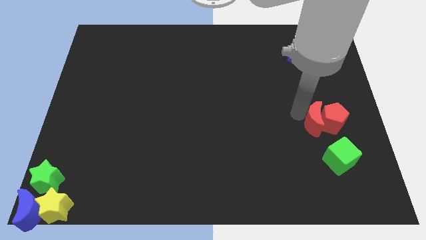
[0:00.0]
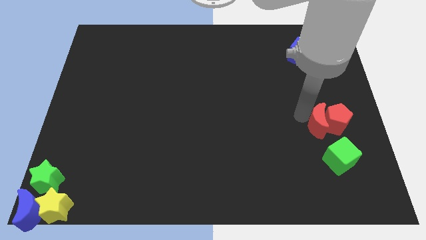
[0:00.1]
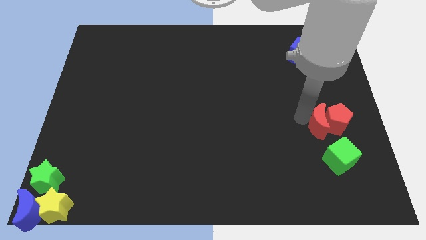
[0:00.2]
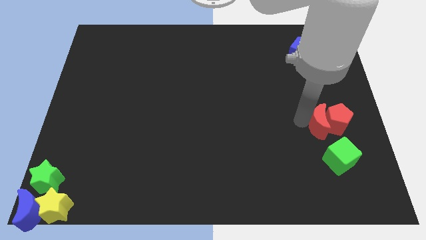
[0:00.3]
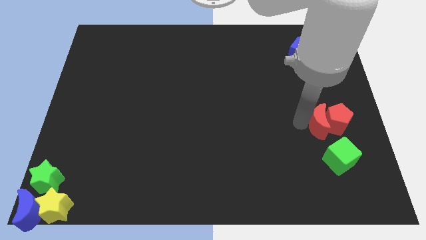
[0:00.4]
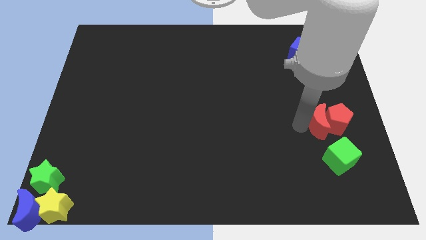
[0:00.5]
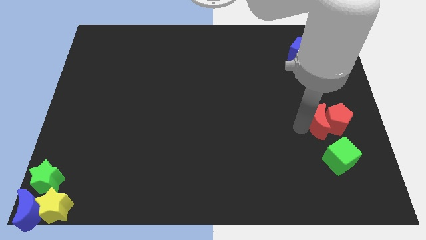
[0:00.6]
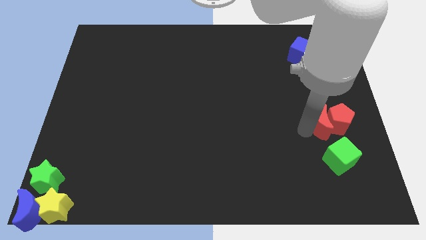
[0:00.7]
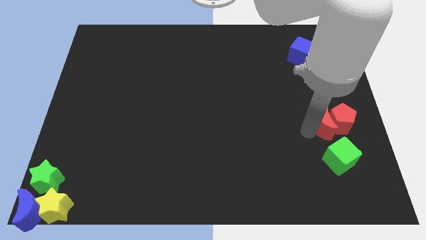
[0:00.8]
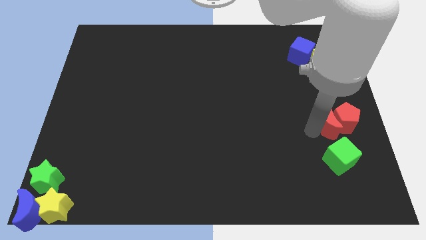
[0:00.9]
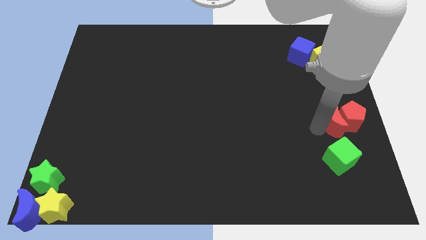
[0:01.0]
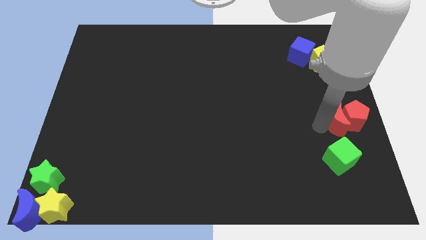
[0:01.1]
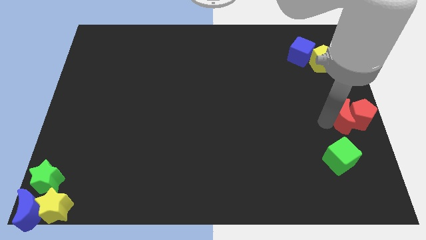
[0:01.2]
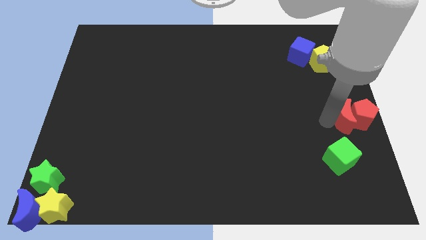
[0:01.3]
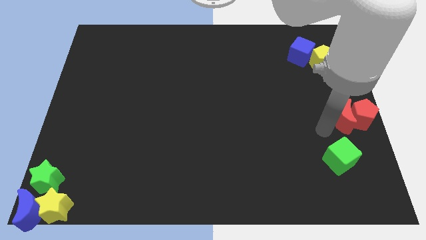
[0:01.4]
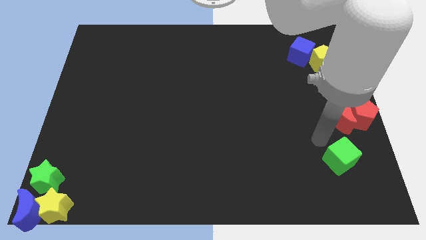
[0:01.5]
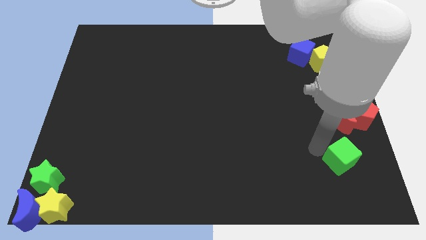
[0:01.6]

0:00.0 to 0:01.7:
push red moon and red pentagon to the right side of the board

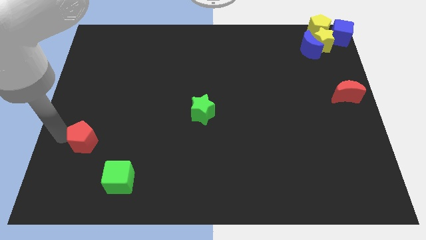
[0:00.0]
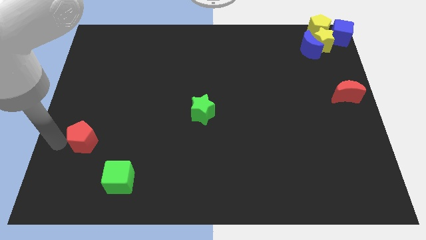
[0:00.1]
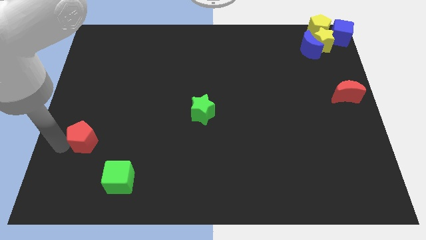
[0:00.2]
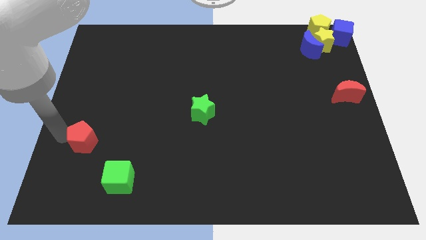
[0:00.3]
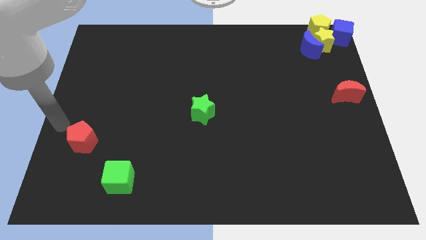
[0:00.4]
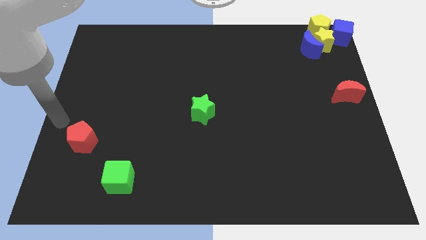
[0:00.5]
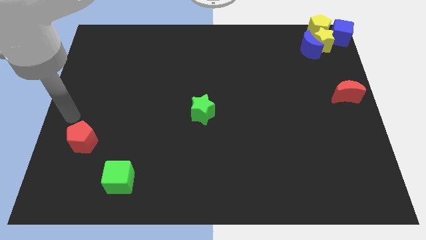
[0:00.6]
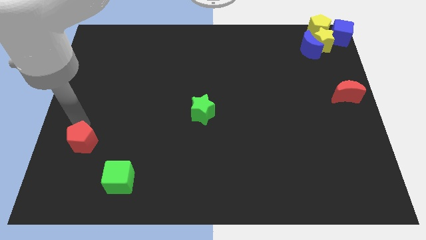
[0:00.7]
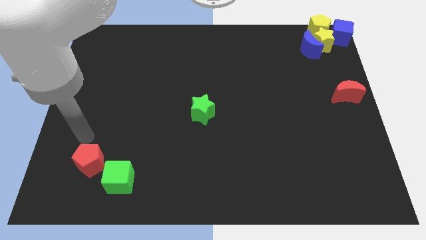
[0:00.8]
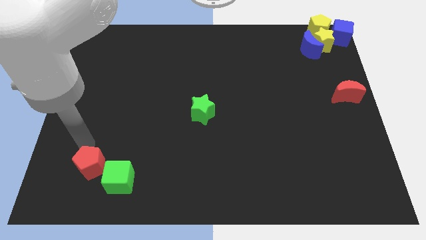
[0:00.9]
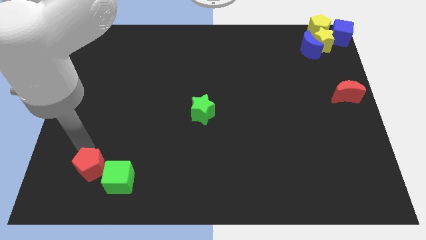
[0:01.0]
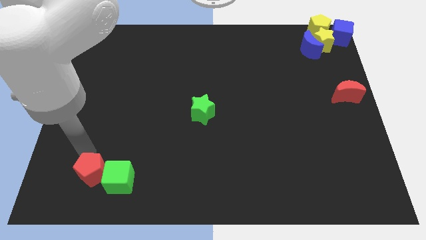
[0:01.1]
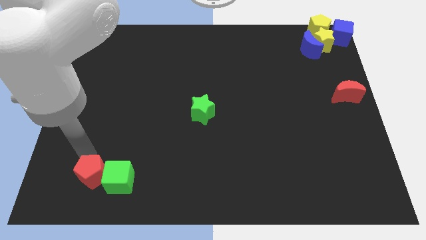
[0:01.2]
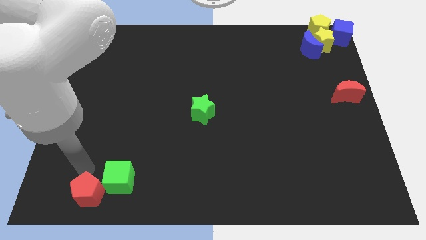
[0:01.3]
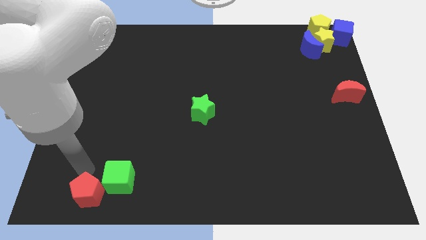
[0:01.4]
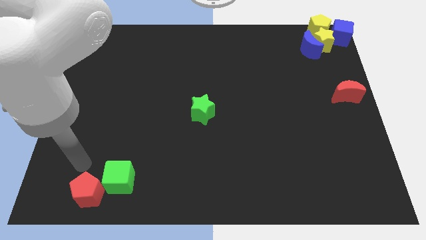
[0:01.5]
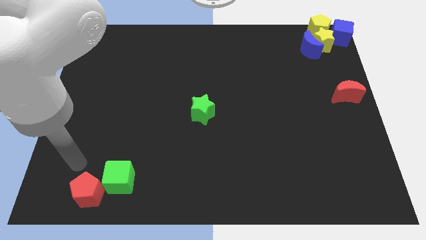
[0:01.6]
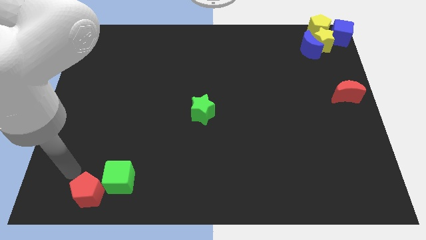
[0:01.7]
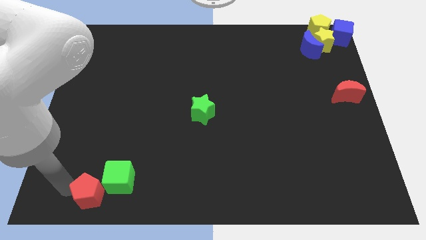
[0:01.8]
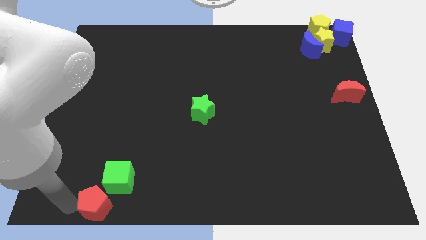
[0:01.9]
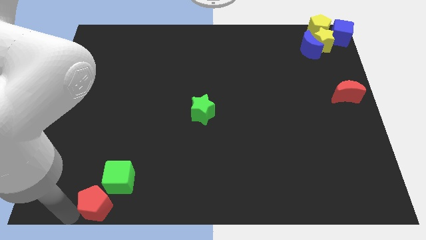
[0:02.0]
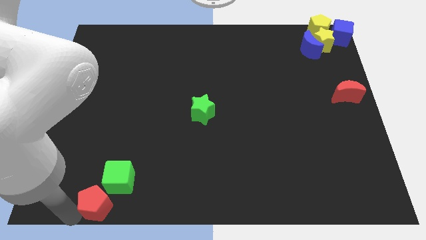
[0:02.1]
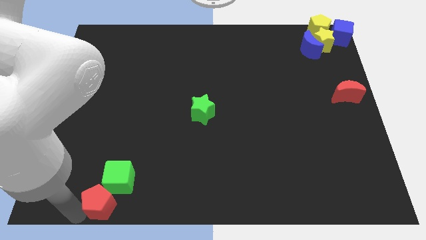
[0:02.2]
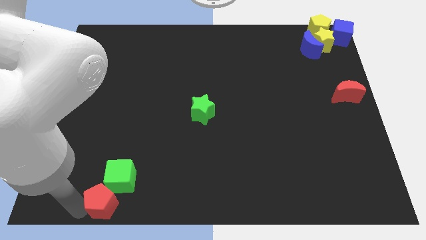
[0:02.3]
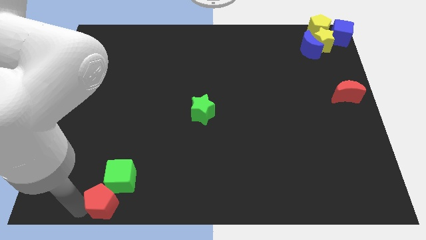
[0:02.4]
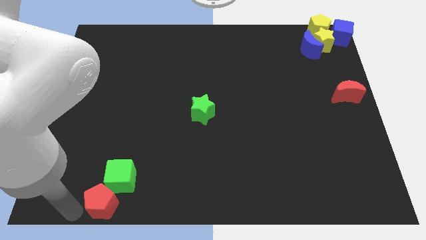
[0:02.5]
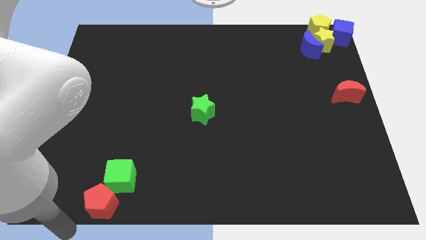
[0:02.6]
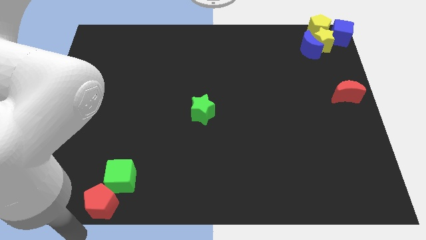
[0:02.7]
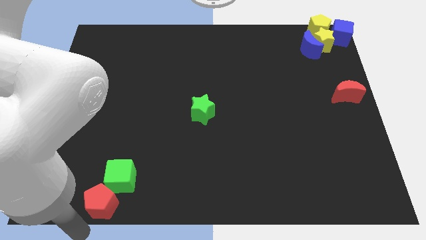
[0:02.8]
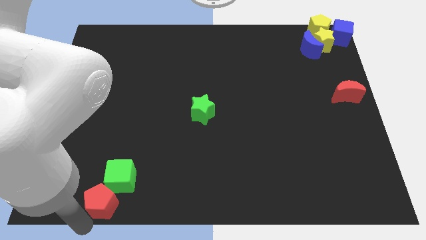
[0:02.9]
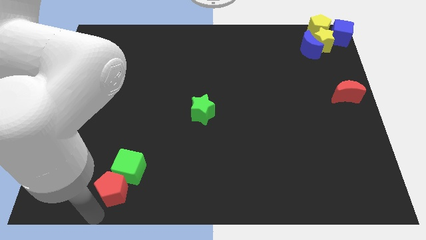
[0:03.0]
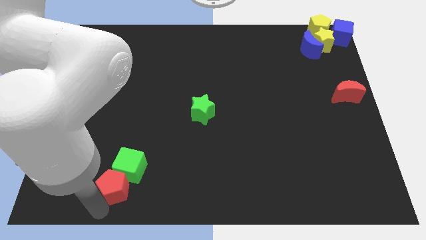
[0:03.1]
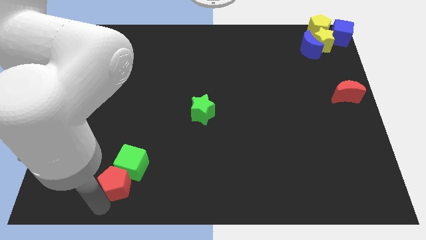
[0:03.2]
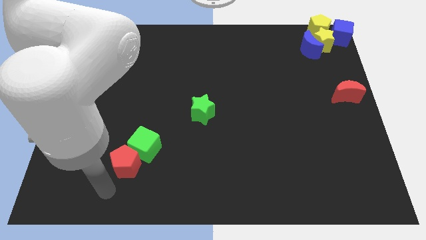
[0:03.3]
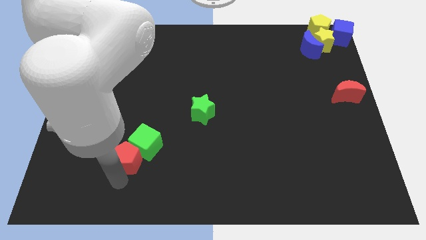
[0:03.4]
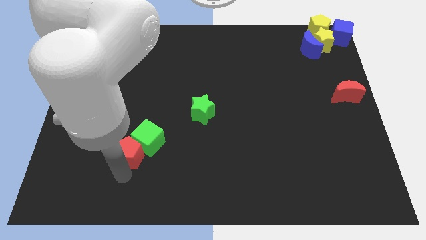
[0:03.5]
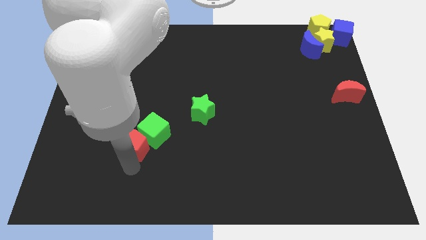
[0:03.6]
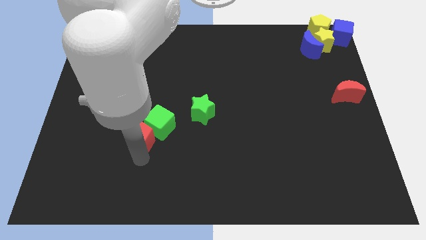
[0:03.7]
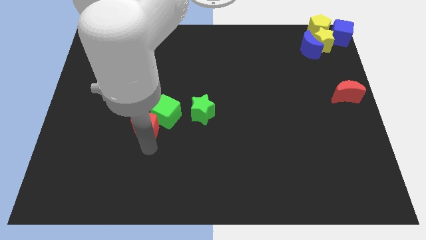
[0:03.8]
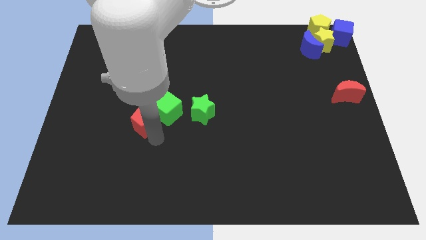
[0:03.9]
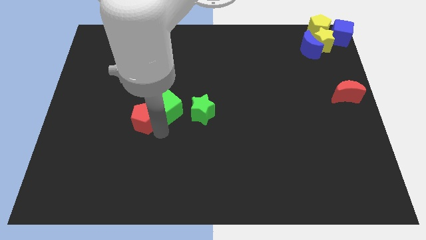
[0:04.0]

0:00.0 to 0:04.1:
move the red pentagon along with green cube at center

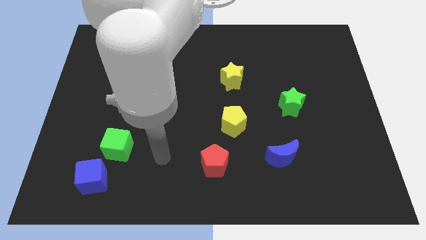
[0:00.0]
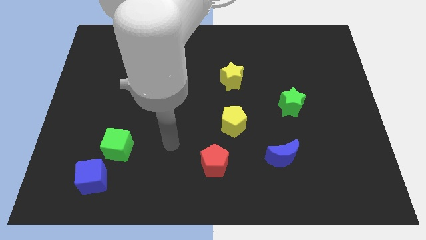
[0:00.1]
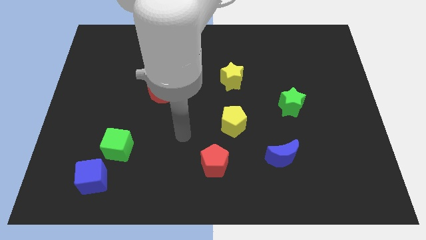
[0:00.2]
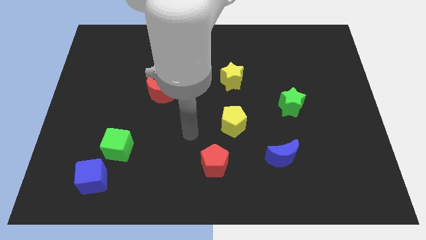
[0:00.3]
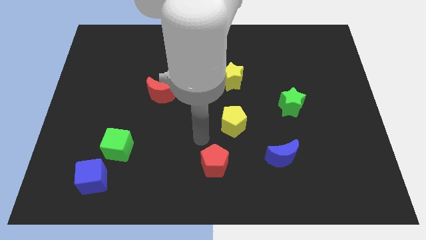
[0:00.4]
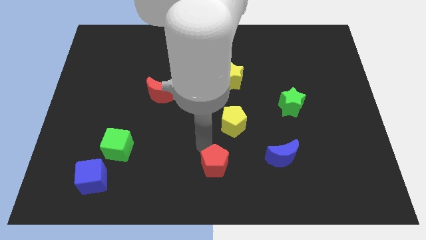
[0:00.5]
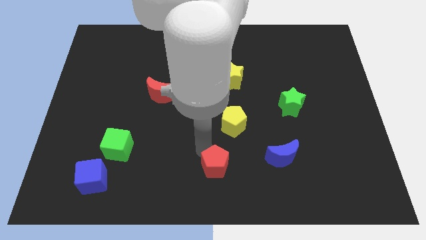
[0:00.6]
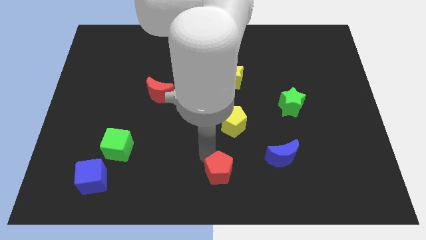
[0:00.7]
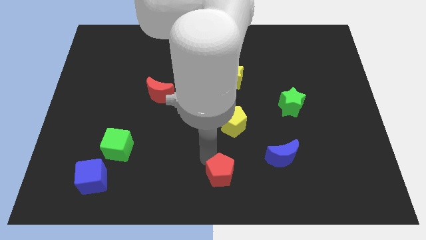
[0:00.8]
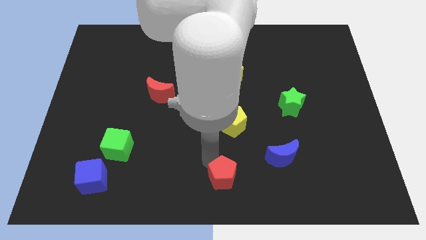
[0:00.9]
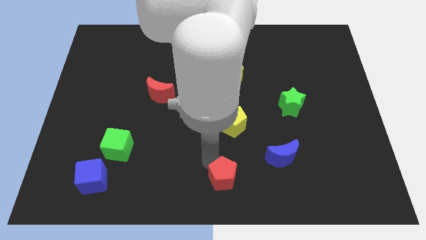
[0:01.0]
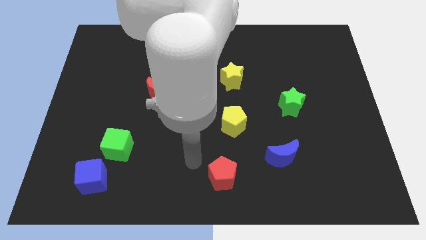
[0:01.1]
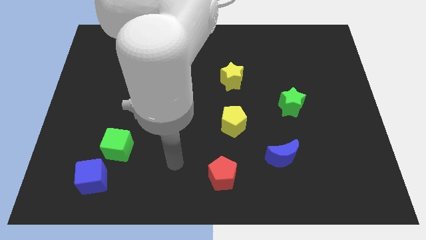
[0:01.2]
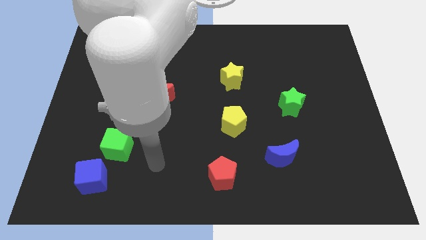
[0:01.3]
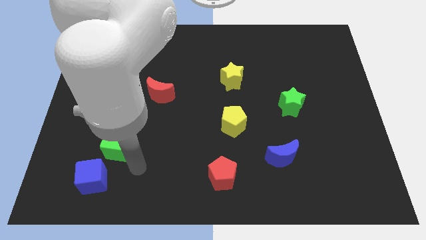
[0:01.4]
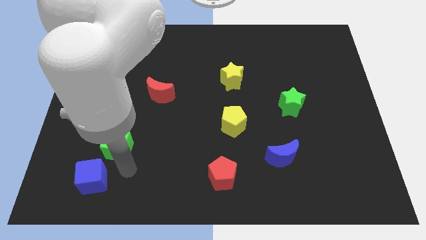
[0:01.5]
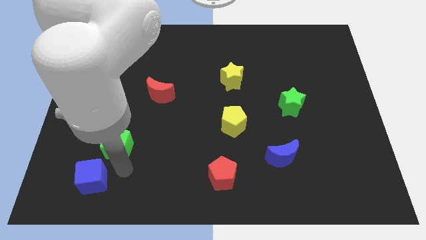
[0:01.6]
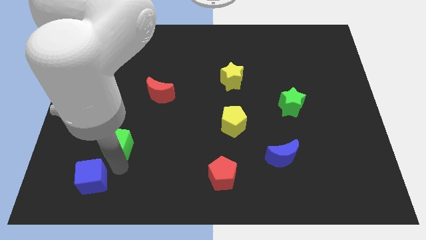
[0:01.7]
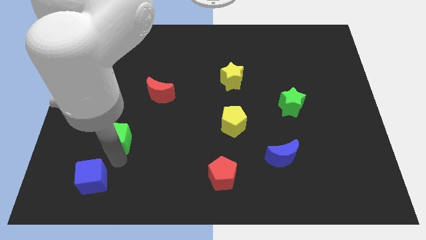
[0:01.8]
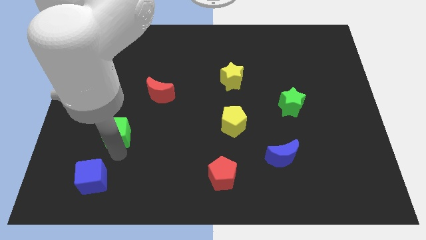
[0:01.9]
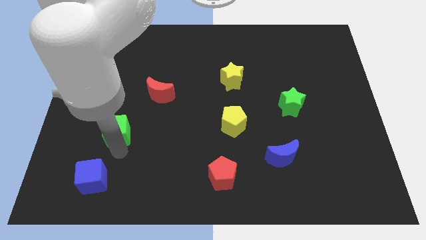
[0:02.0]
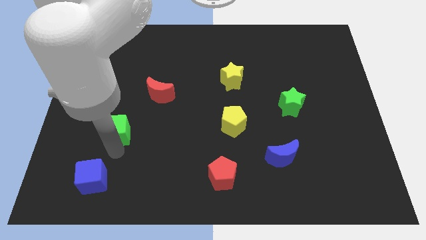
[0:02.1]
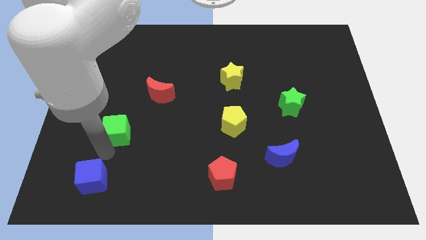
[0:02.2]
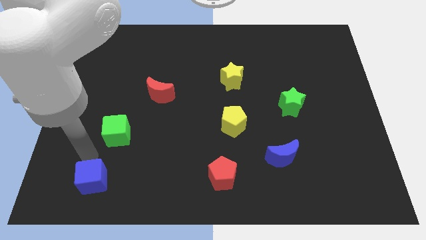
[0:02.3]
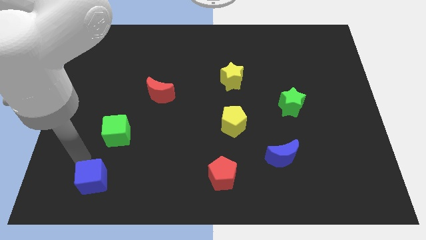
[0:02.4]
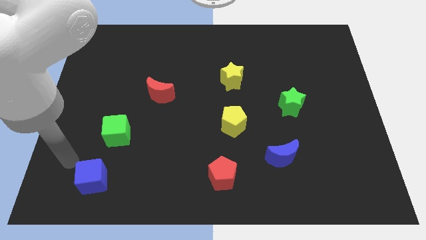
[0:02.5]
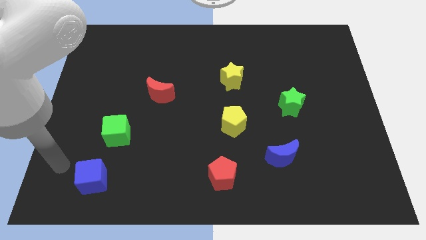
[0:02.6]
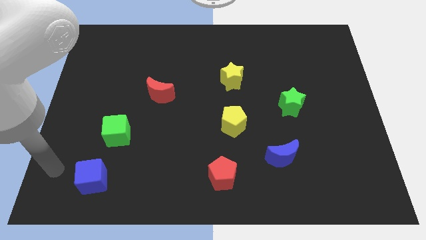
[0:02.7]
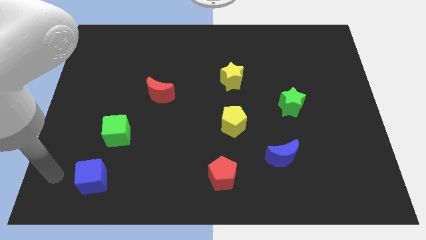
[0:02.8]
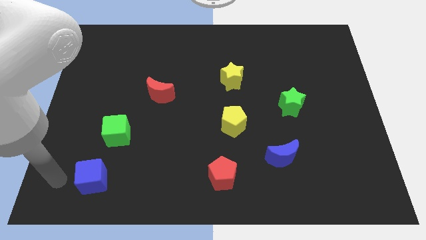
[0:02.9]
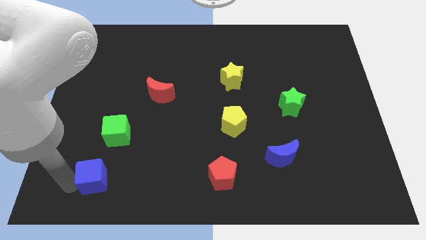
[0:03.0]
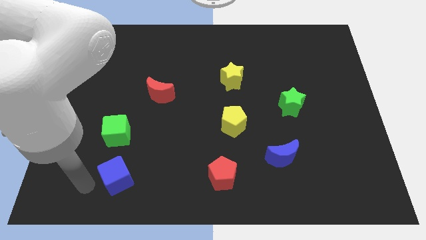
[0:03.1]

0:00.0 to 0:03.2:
place the blue cube to the bottom of the green cube

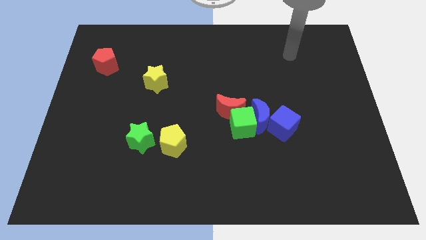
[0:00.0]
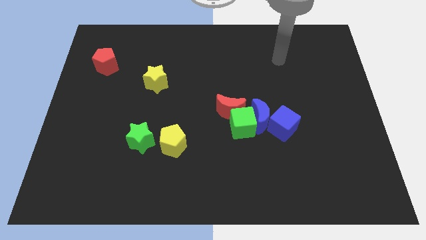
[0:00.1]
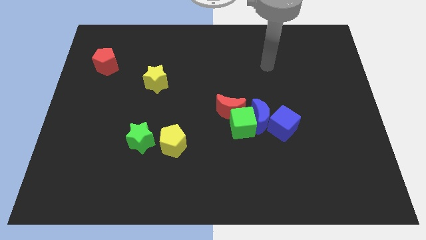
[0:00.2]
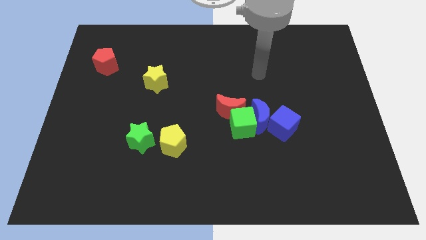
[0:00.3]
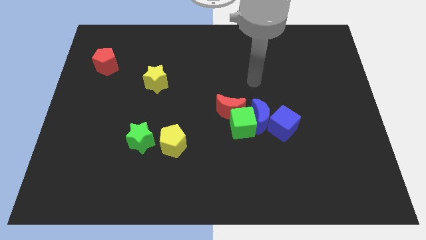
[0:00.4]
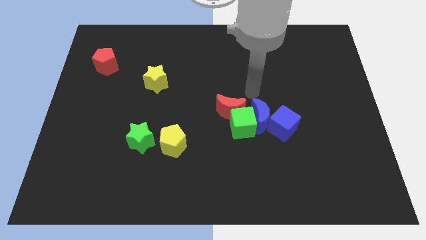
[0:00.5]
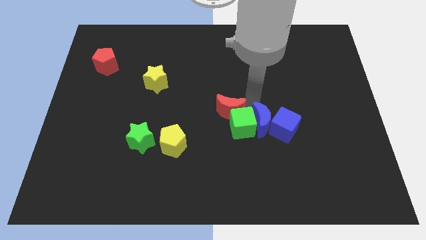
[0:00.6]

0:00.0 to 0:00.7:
move arm near blue crescent
